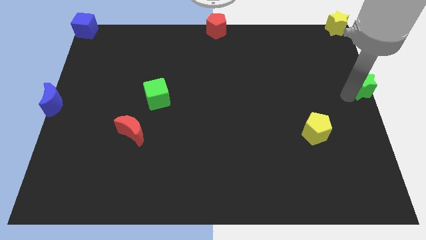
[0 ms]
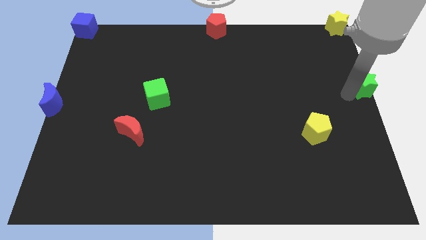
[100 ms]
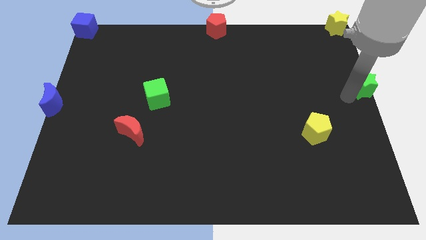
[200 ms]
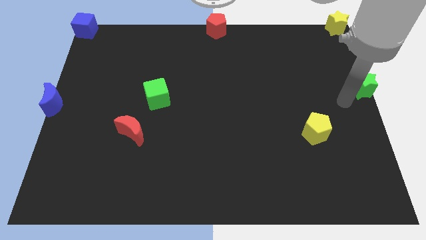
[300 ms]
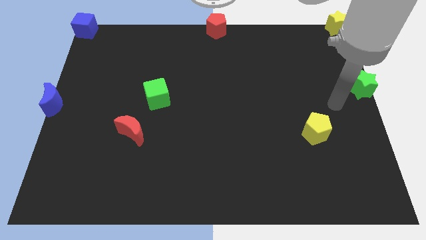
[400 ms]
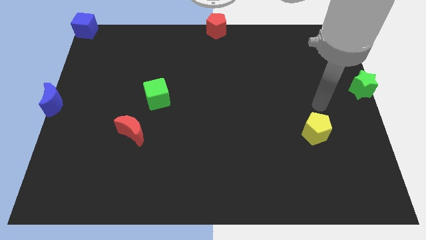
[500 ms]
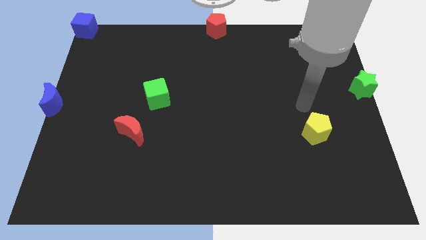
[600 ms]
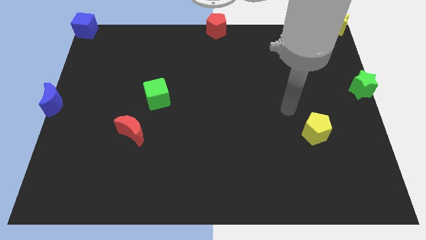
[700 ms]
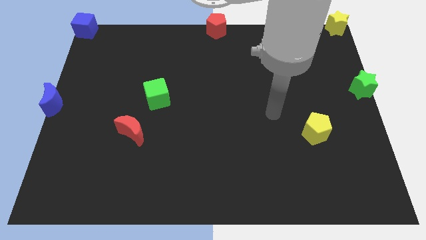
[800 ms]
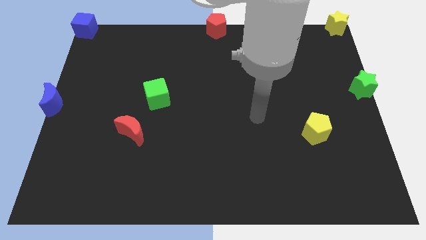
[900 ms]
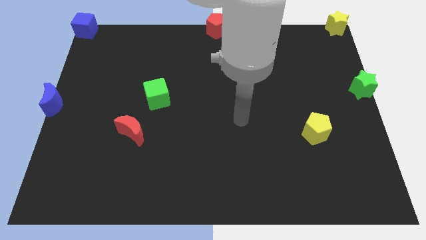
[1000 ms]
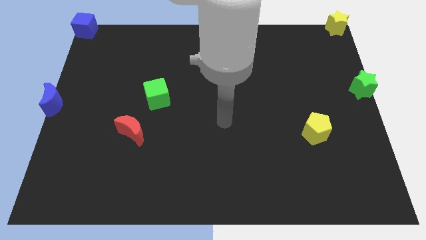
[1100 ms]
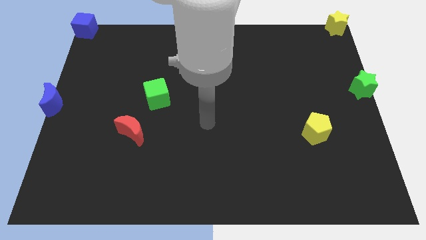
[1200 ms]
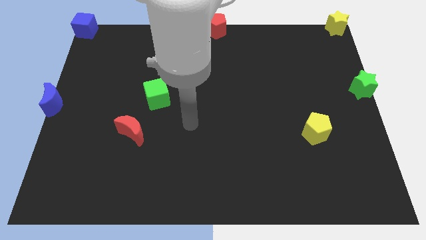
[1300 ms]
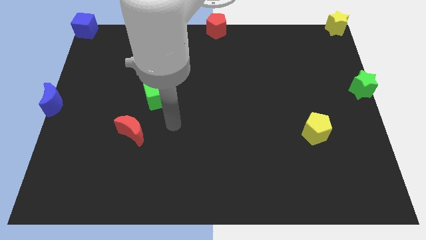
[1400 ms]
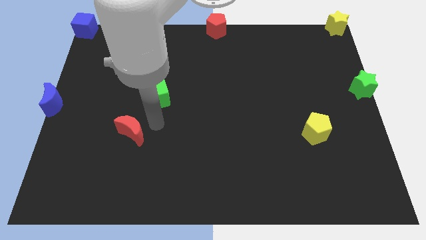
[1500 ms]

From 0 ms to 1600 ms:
move the arm towards the red moon

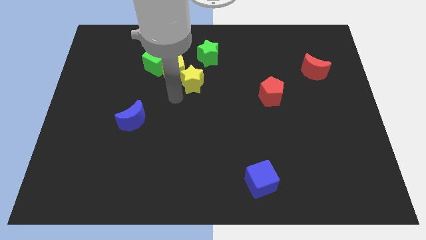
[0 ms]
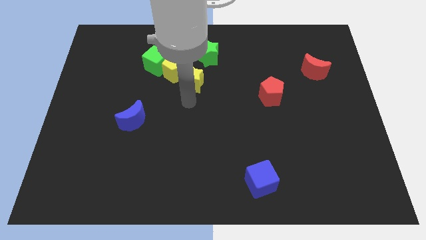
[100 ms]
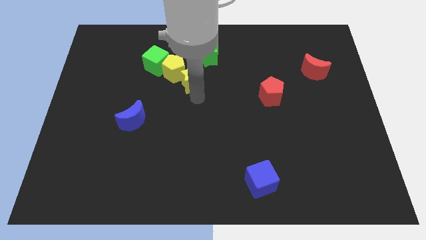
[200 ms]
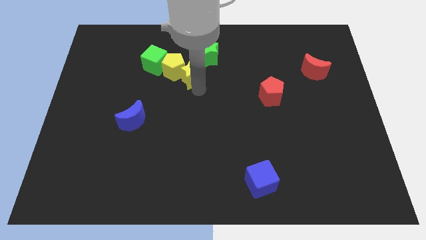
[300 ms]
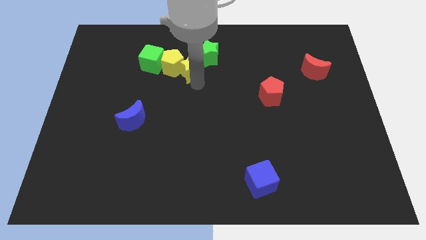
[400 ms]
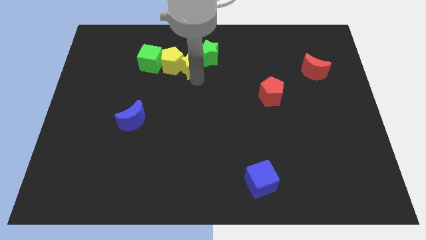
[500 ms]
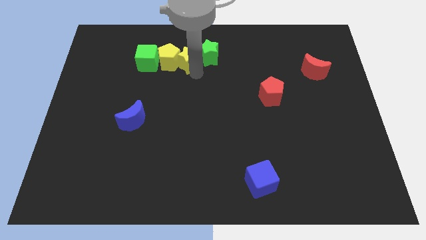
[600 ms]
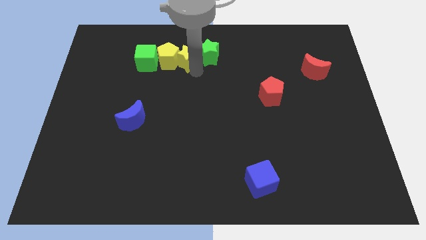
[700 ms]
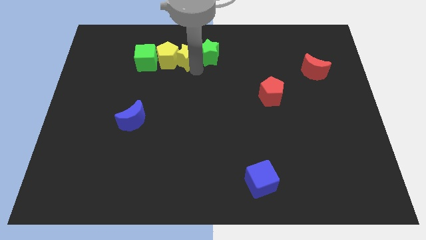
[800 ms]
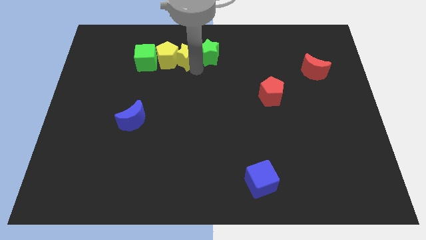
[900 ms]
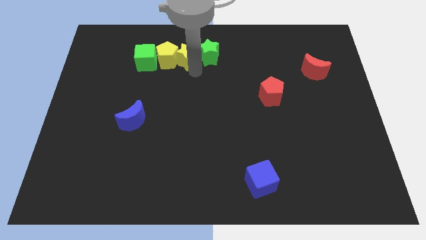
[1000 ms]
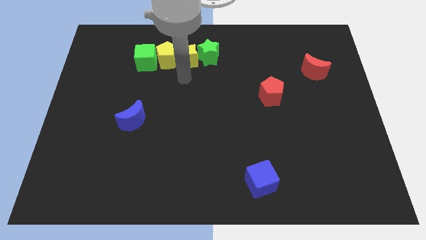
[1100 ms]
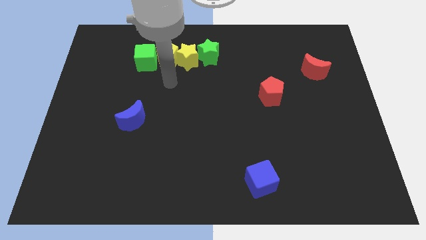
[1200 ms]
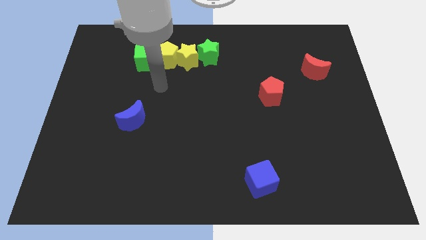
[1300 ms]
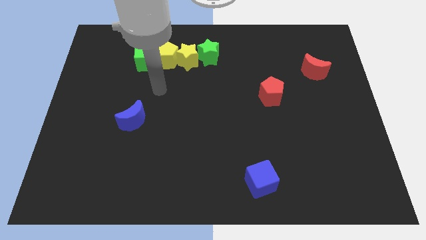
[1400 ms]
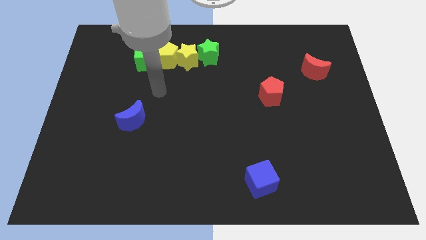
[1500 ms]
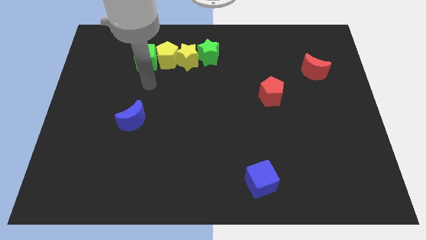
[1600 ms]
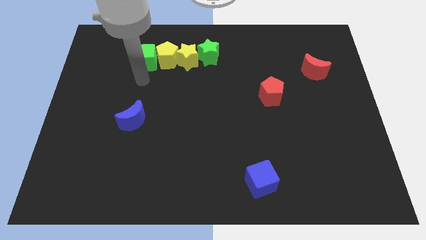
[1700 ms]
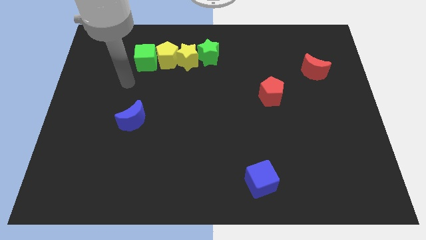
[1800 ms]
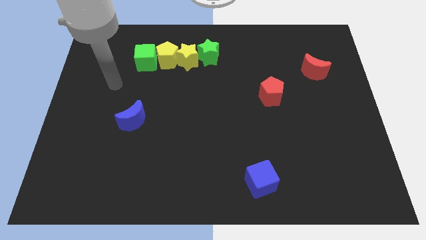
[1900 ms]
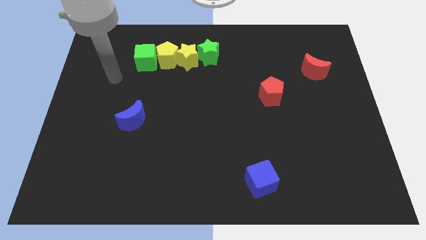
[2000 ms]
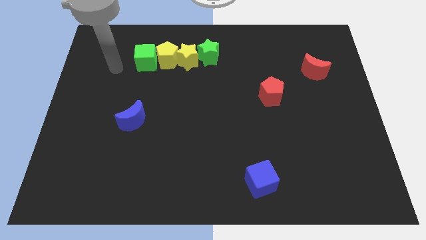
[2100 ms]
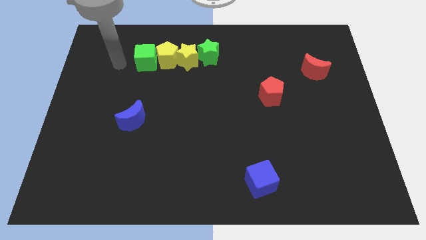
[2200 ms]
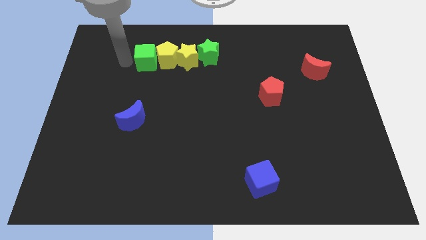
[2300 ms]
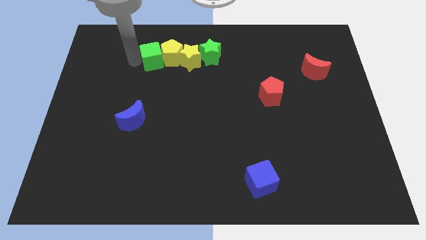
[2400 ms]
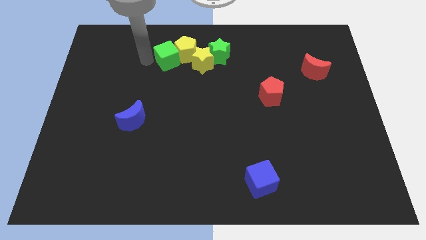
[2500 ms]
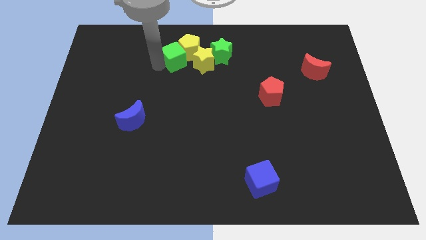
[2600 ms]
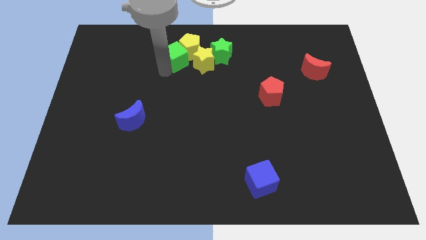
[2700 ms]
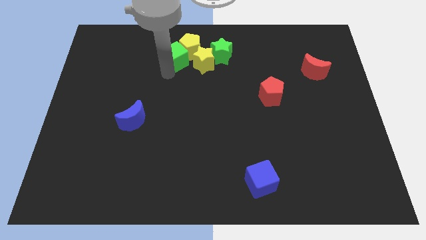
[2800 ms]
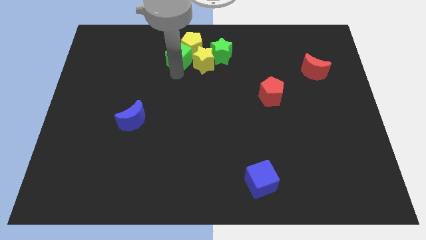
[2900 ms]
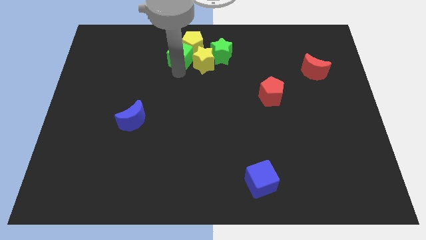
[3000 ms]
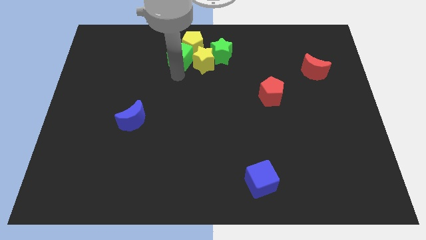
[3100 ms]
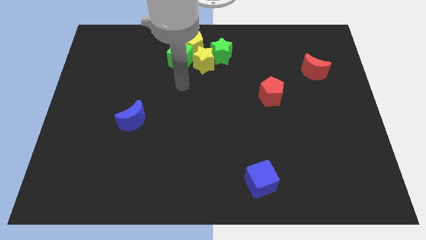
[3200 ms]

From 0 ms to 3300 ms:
push green star beside yellow star

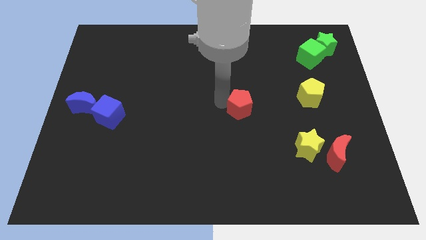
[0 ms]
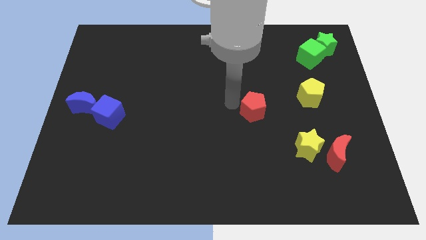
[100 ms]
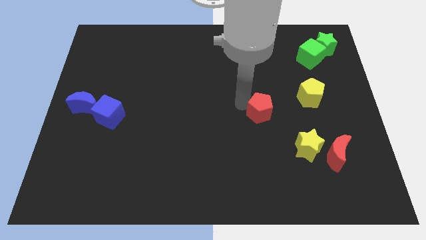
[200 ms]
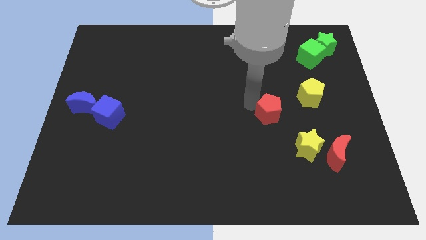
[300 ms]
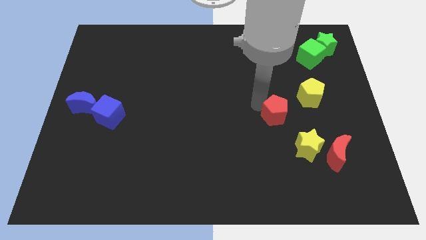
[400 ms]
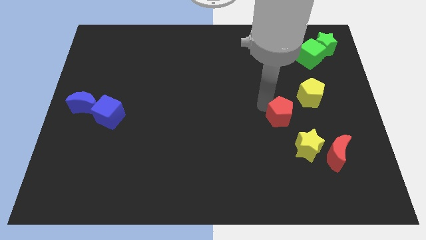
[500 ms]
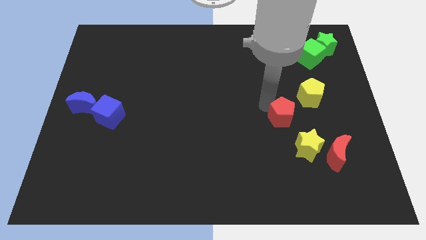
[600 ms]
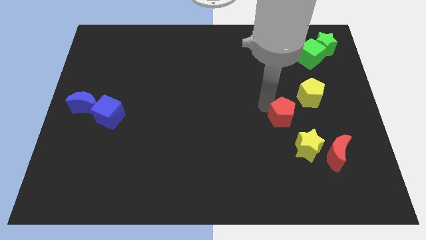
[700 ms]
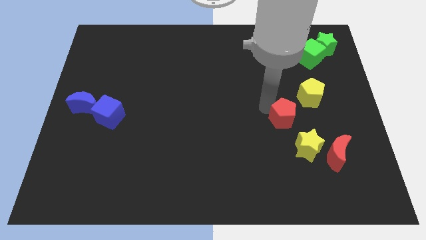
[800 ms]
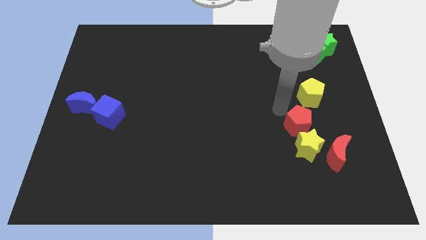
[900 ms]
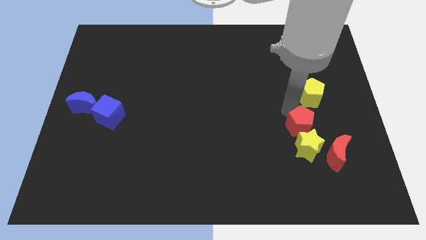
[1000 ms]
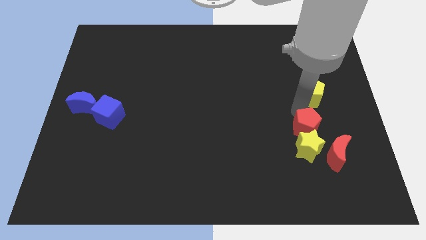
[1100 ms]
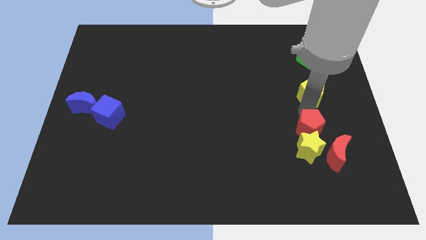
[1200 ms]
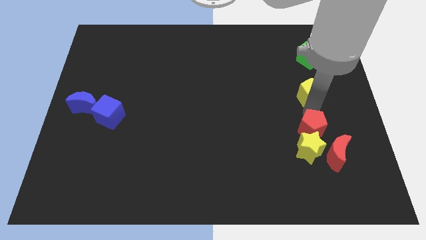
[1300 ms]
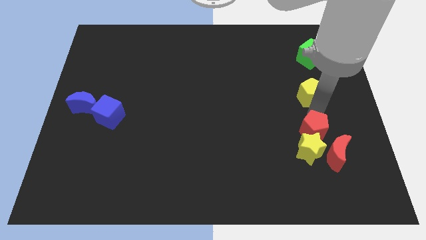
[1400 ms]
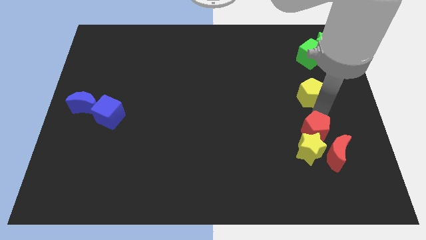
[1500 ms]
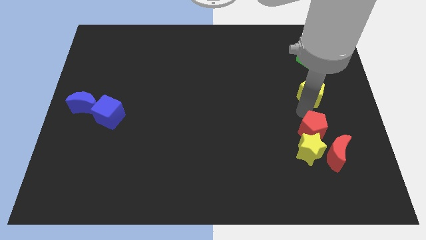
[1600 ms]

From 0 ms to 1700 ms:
push the red pentagon into the yellow star

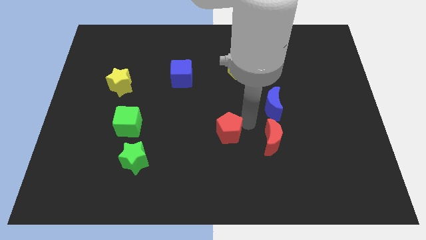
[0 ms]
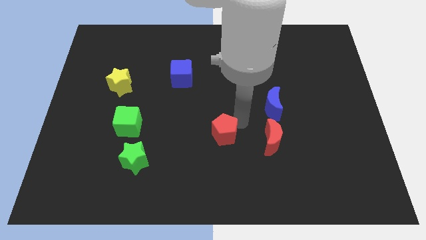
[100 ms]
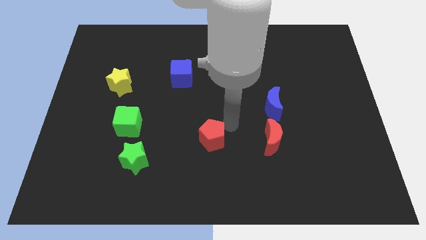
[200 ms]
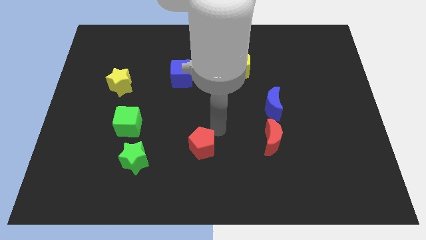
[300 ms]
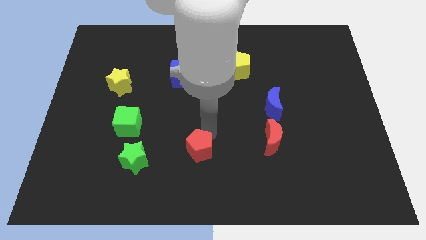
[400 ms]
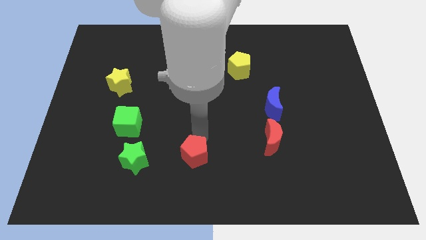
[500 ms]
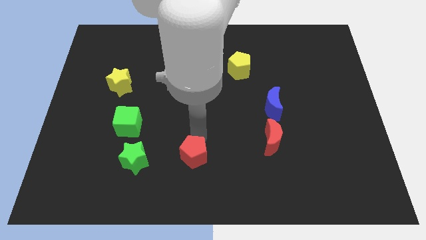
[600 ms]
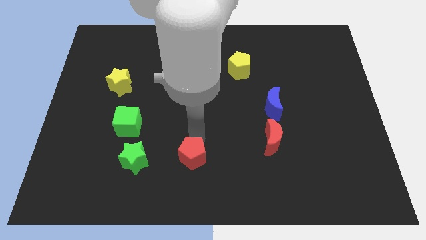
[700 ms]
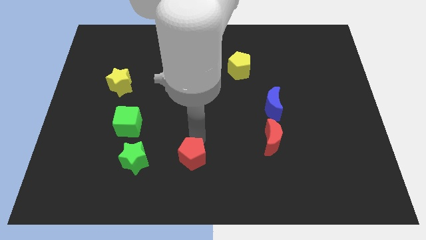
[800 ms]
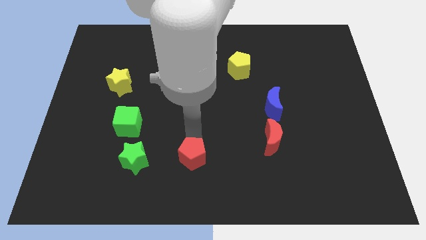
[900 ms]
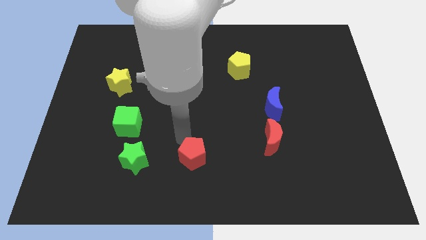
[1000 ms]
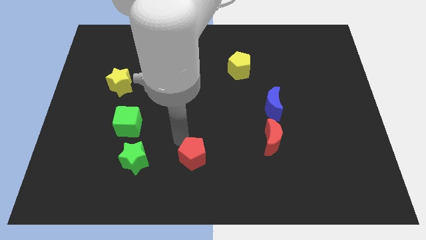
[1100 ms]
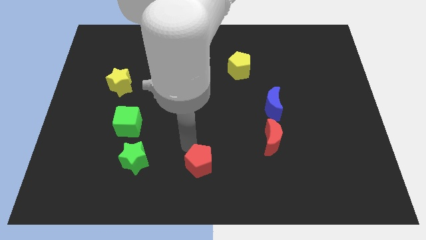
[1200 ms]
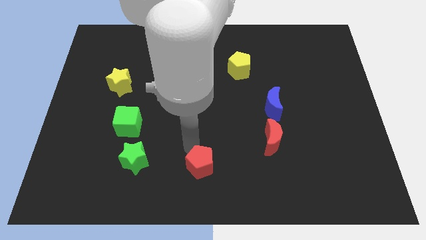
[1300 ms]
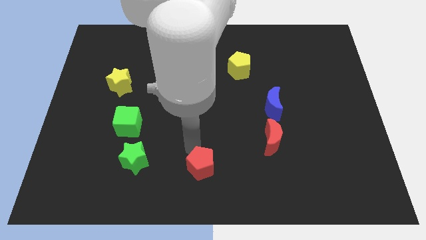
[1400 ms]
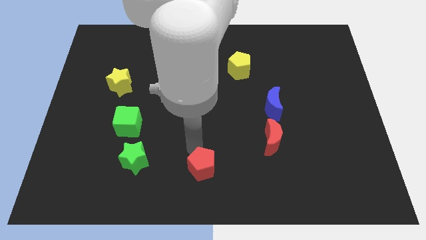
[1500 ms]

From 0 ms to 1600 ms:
place the red pentagon to the right of green star

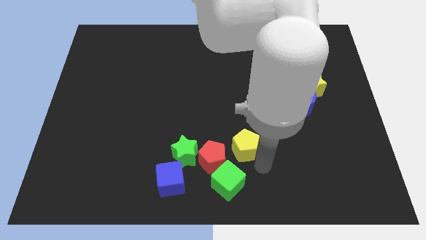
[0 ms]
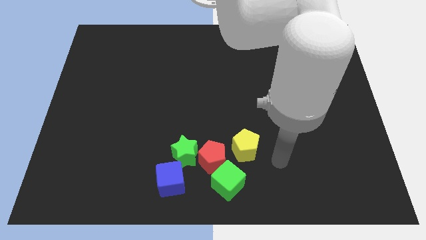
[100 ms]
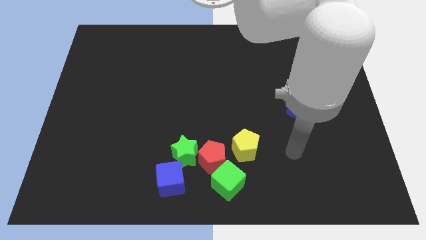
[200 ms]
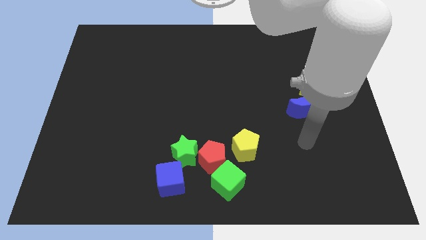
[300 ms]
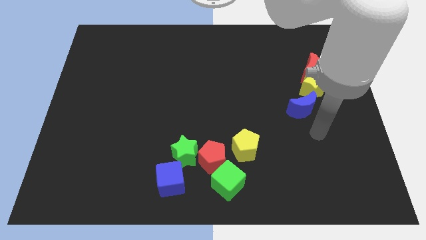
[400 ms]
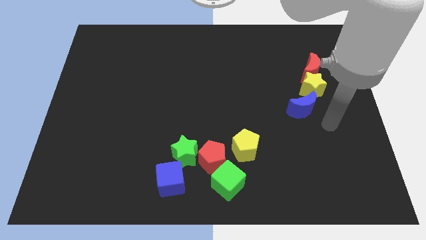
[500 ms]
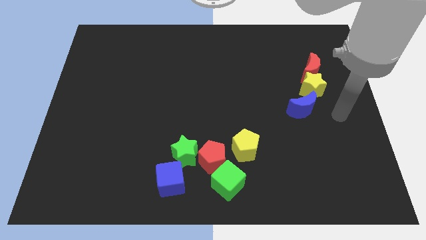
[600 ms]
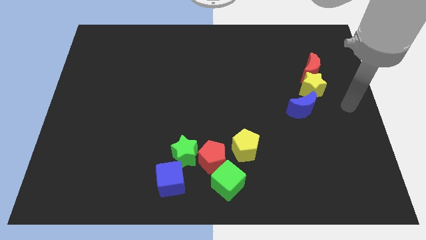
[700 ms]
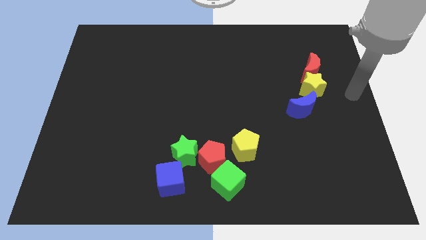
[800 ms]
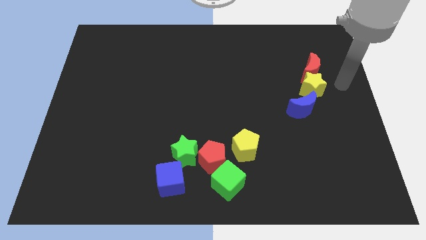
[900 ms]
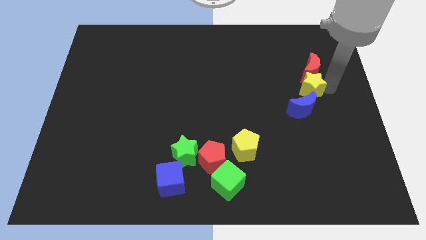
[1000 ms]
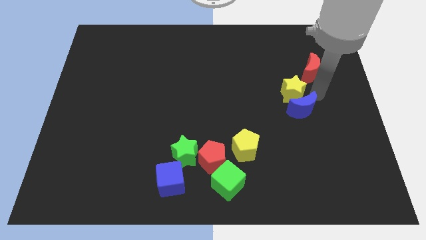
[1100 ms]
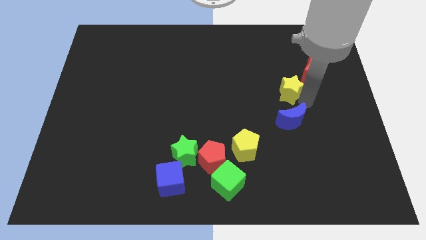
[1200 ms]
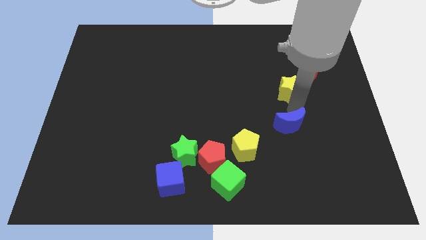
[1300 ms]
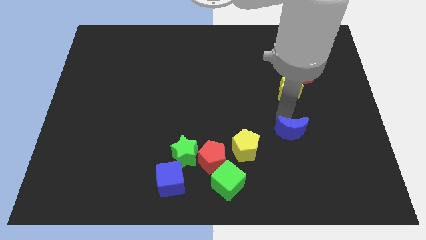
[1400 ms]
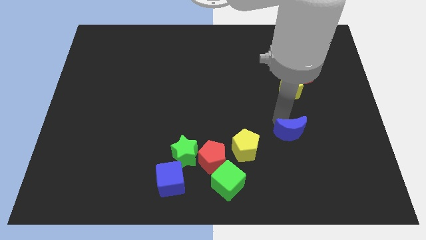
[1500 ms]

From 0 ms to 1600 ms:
separate the yellow star and blue moon from each other
